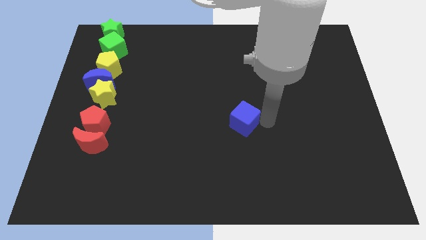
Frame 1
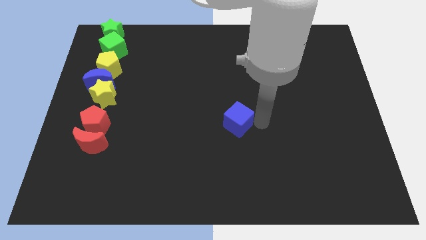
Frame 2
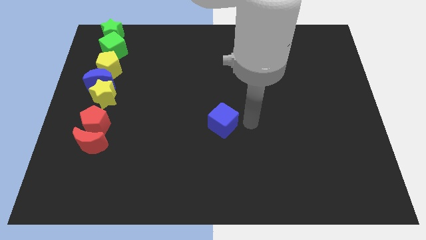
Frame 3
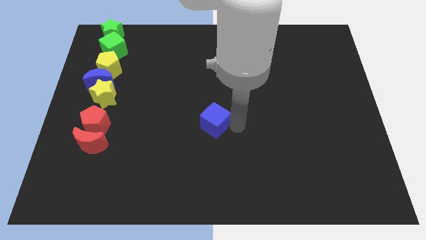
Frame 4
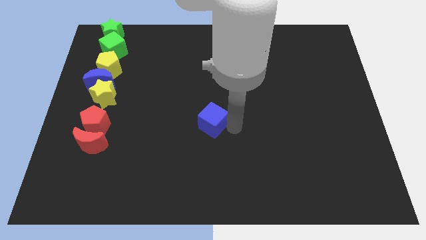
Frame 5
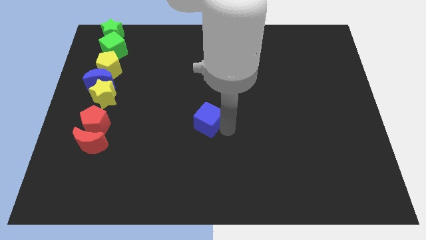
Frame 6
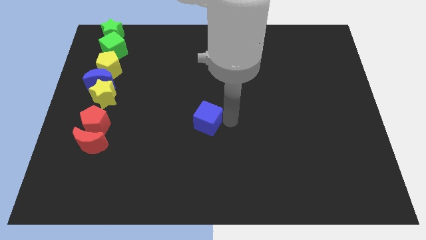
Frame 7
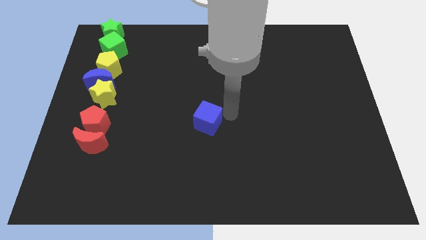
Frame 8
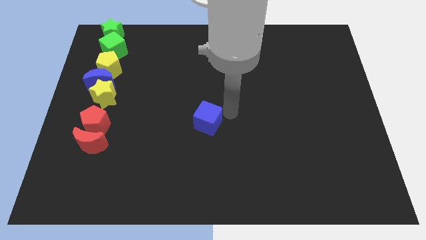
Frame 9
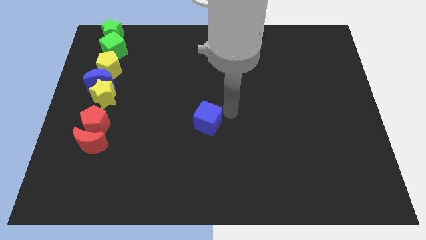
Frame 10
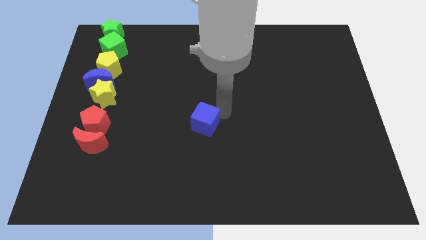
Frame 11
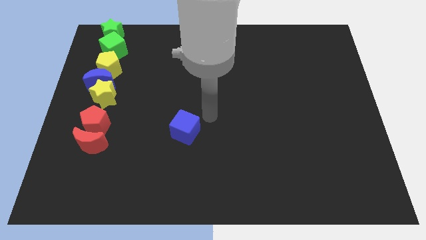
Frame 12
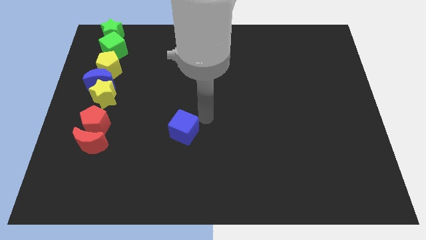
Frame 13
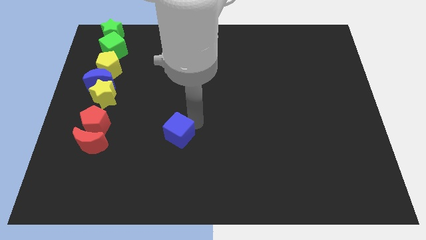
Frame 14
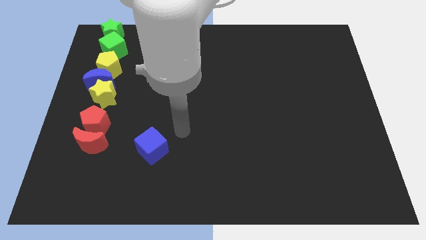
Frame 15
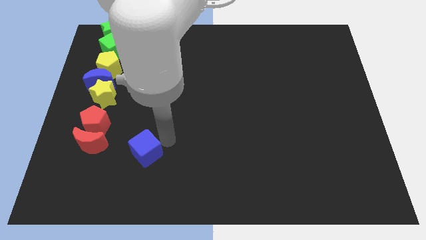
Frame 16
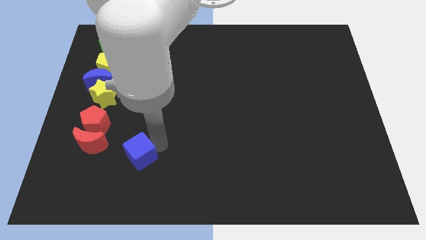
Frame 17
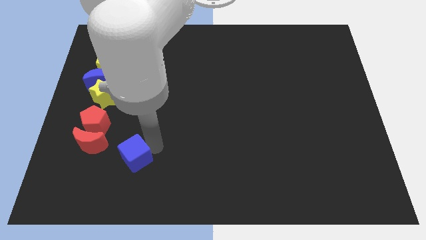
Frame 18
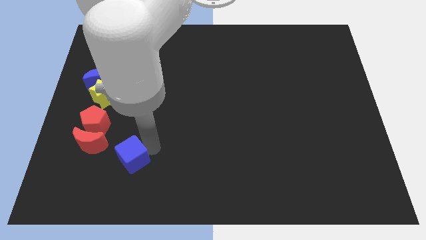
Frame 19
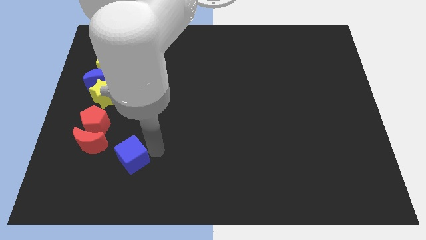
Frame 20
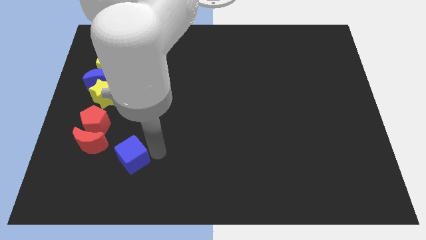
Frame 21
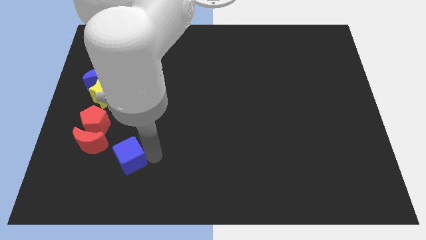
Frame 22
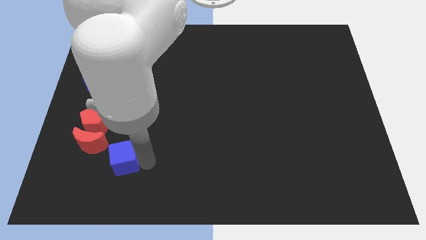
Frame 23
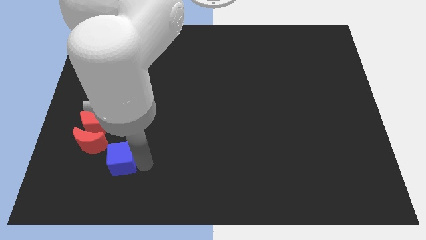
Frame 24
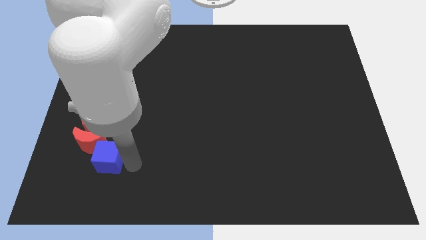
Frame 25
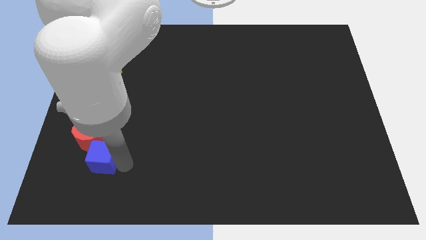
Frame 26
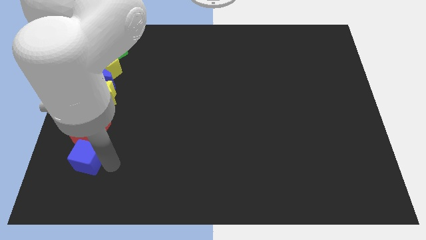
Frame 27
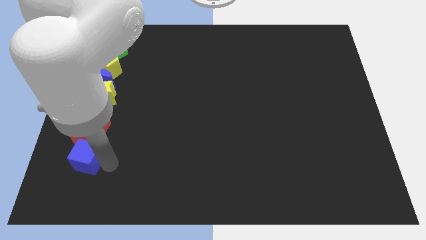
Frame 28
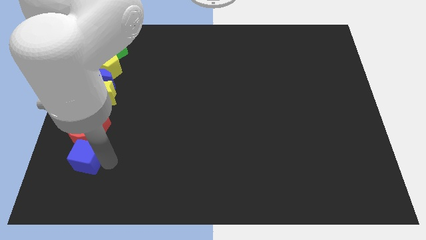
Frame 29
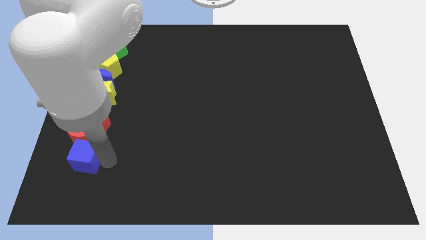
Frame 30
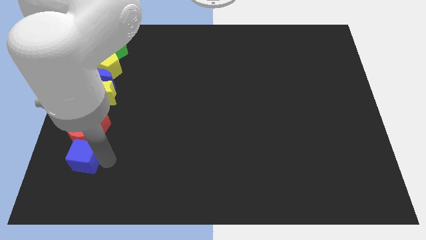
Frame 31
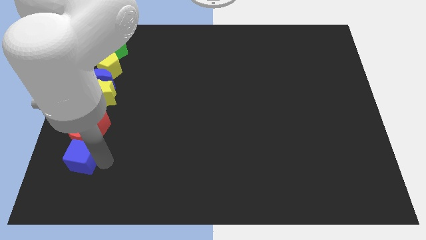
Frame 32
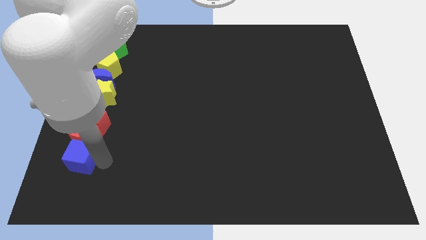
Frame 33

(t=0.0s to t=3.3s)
move the blue cube into the bottom side of the red crescent

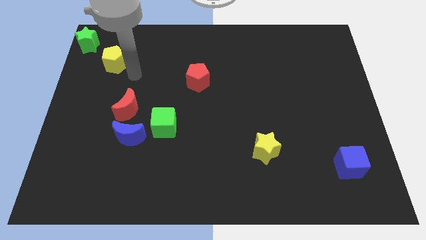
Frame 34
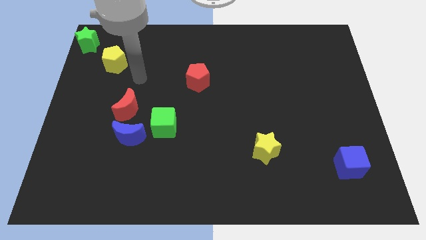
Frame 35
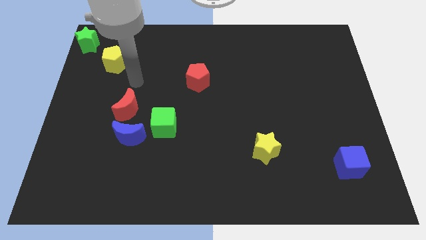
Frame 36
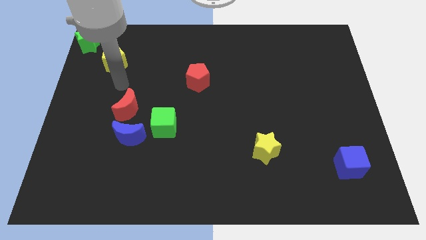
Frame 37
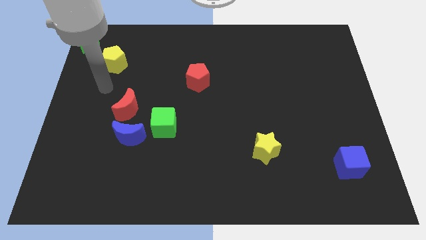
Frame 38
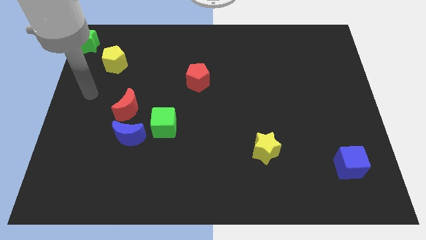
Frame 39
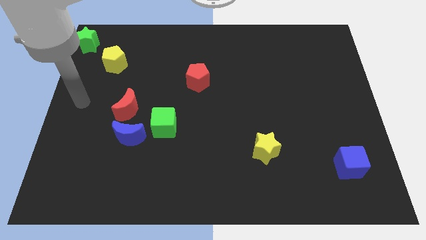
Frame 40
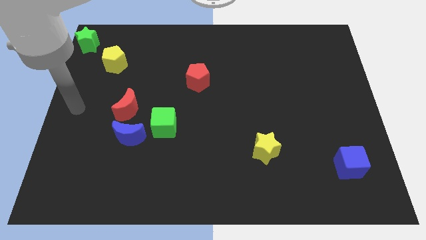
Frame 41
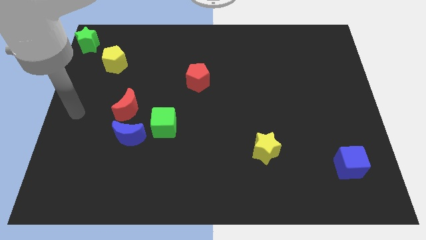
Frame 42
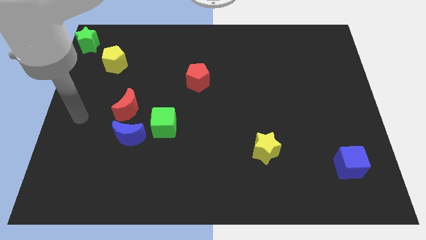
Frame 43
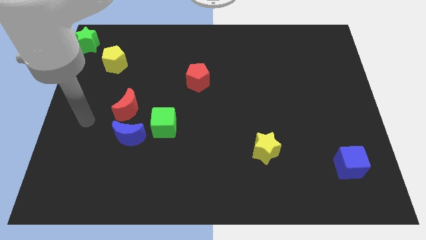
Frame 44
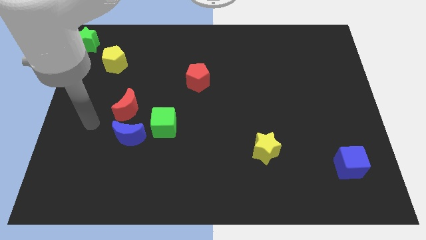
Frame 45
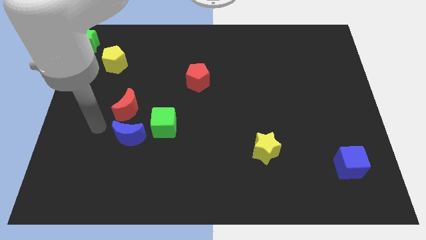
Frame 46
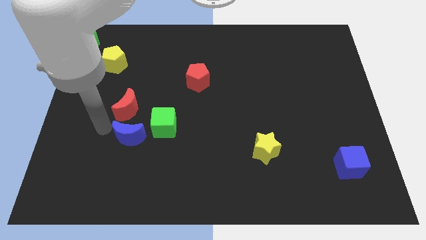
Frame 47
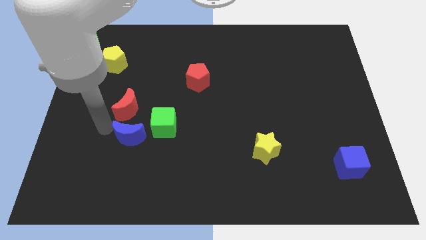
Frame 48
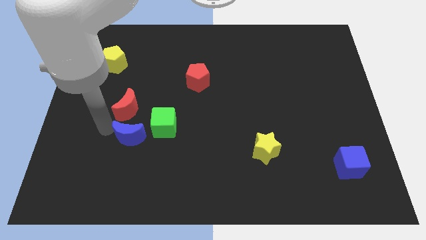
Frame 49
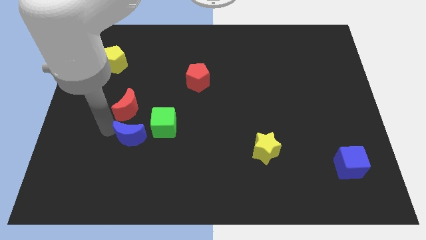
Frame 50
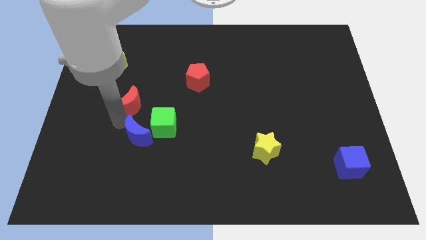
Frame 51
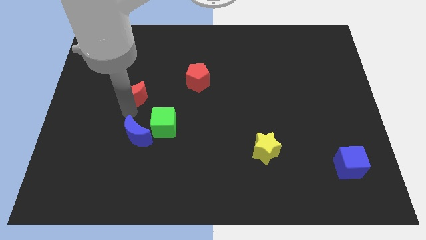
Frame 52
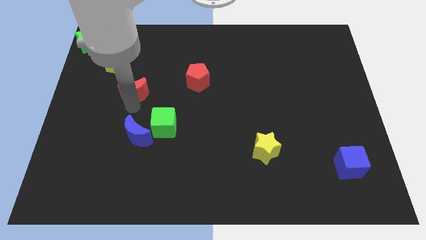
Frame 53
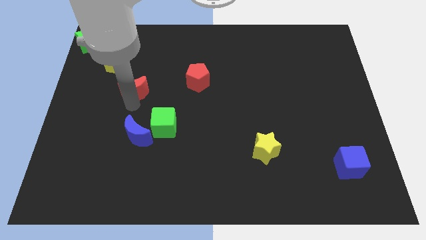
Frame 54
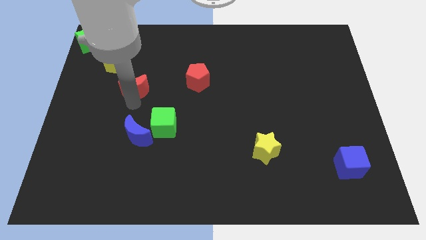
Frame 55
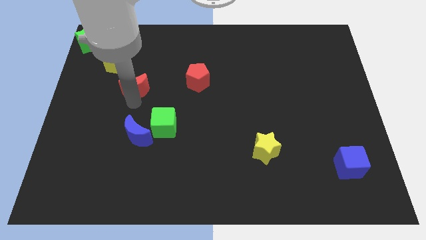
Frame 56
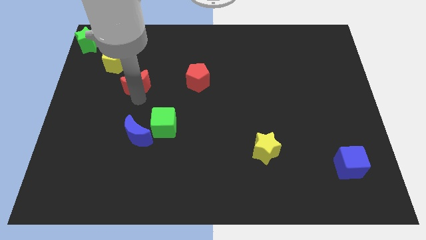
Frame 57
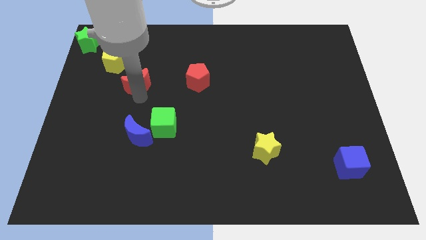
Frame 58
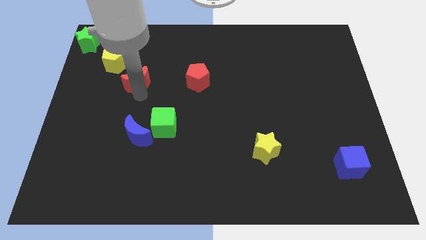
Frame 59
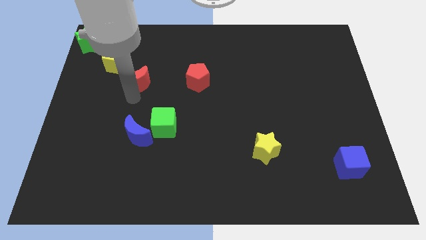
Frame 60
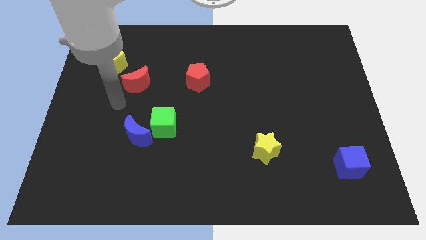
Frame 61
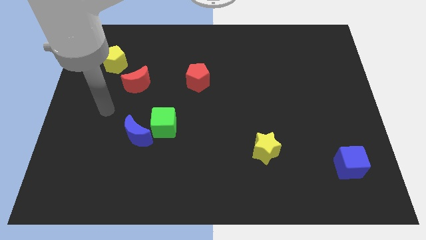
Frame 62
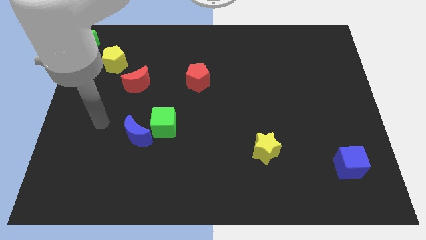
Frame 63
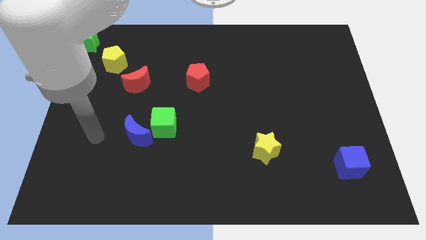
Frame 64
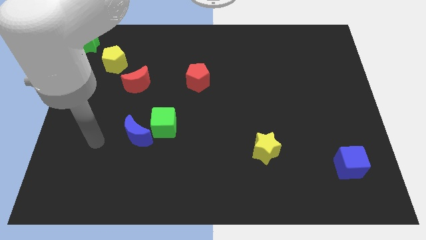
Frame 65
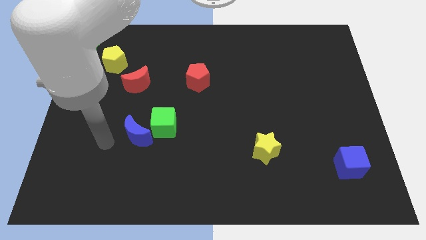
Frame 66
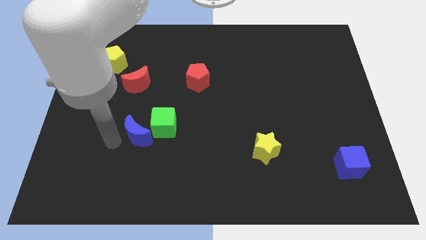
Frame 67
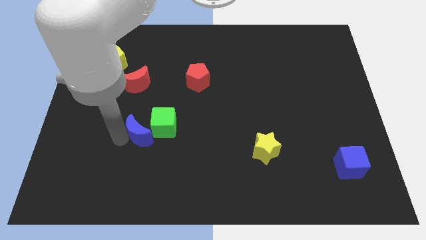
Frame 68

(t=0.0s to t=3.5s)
move red crescent slightly upwards

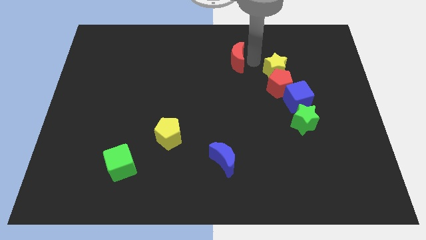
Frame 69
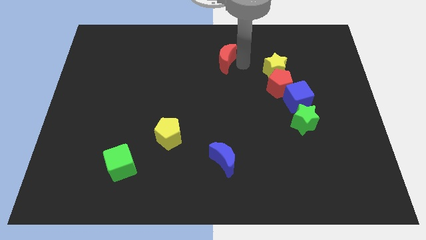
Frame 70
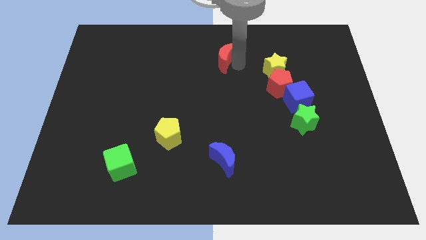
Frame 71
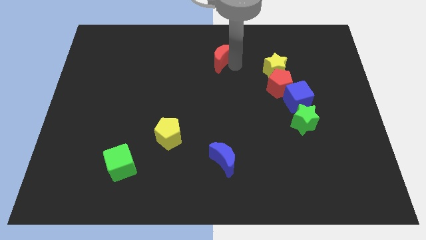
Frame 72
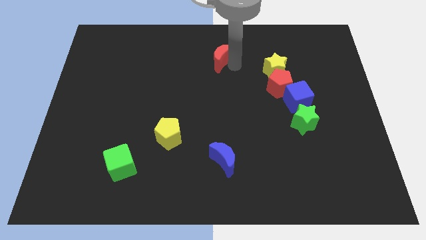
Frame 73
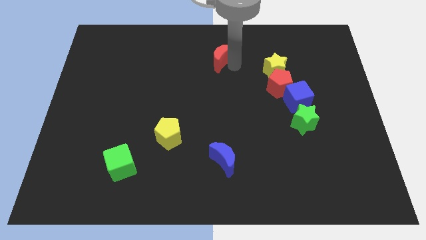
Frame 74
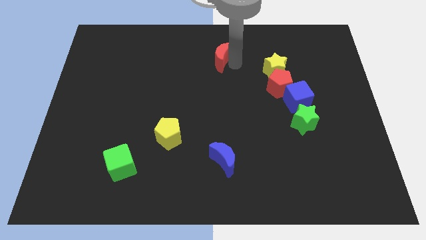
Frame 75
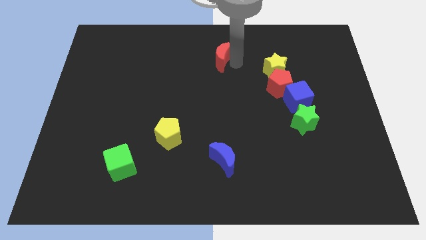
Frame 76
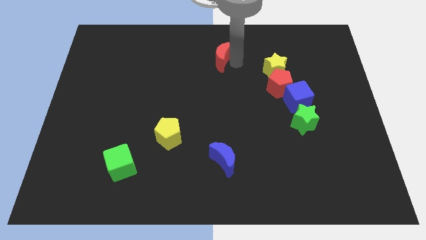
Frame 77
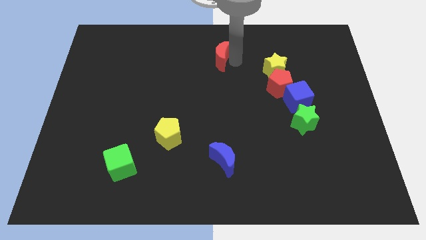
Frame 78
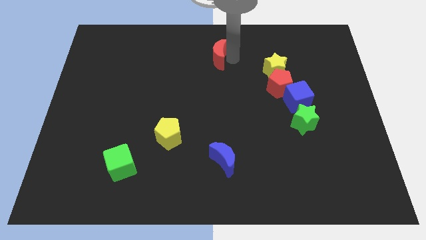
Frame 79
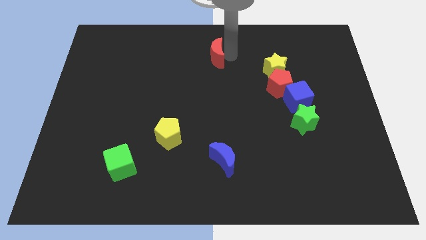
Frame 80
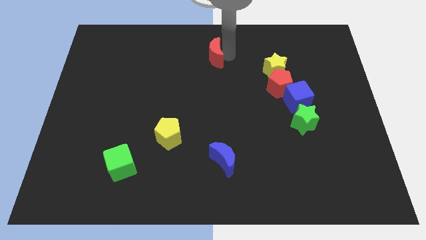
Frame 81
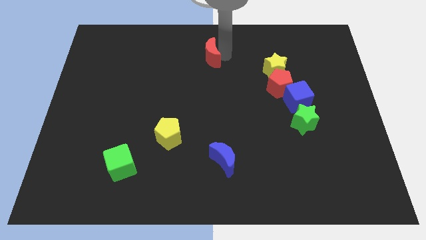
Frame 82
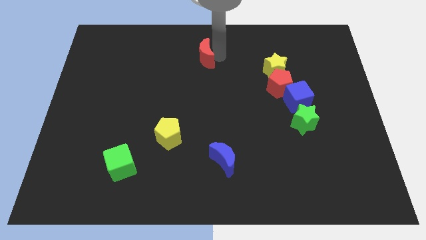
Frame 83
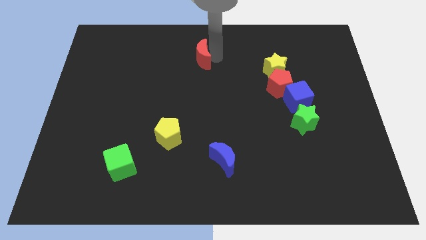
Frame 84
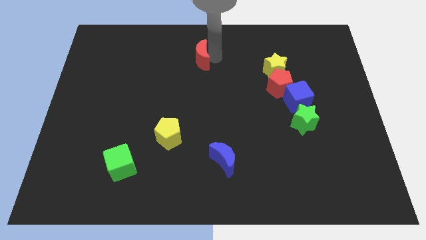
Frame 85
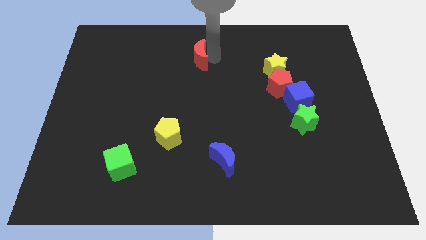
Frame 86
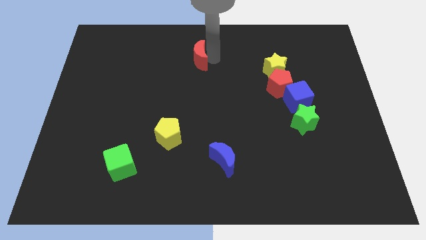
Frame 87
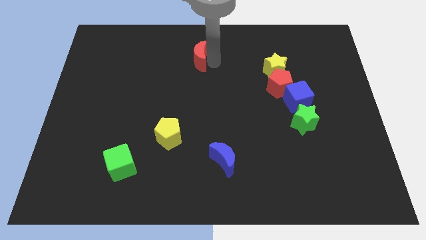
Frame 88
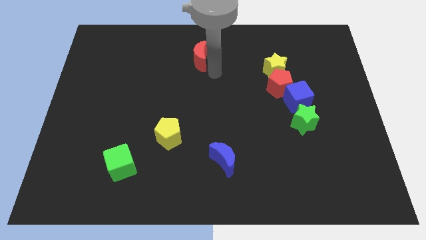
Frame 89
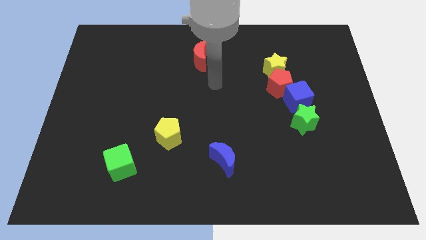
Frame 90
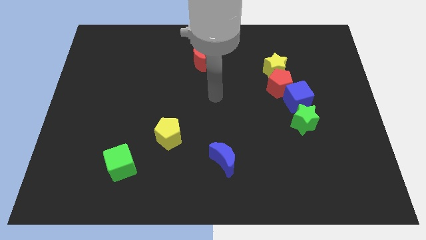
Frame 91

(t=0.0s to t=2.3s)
push red crescent to the left side of the board
